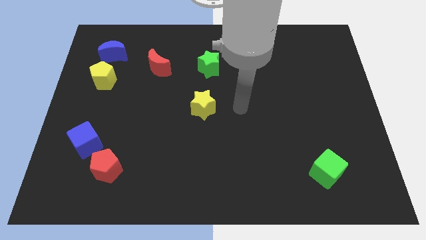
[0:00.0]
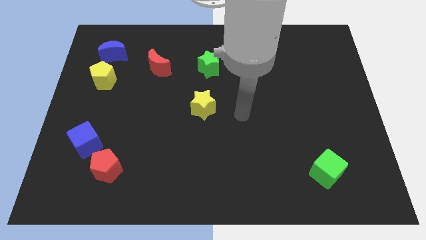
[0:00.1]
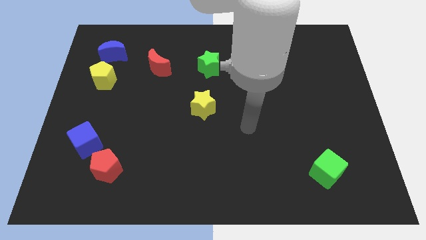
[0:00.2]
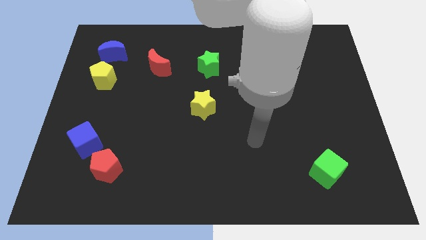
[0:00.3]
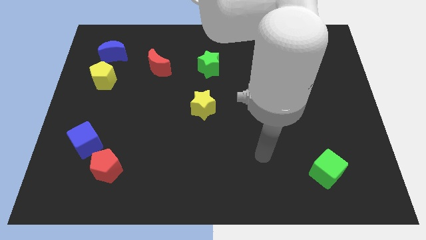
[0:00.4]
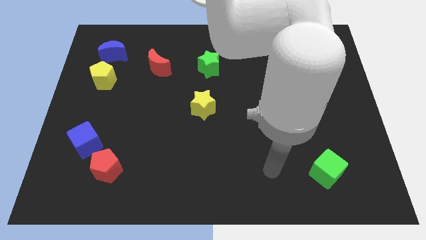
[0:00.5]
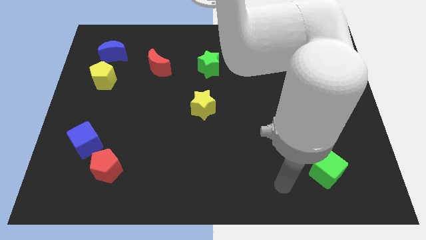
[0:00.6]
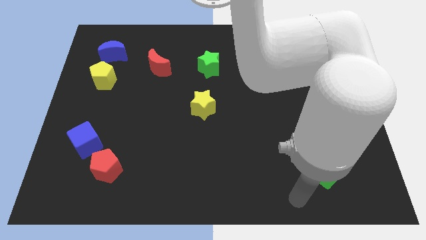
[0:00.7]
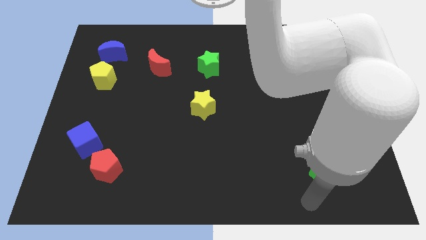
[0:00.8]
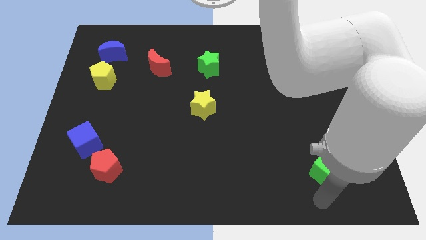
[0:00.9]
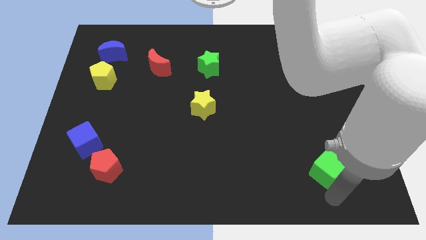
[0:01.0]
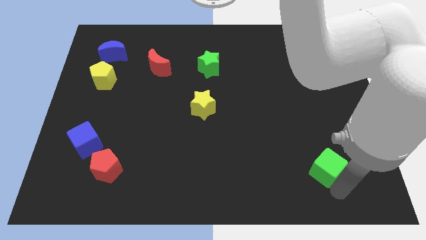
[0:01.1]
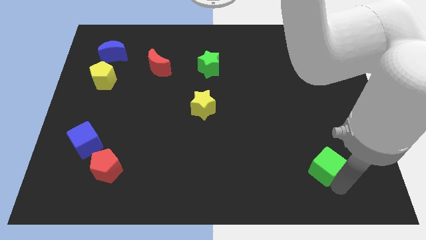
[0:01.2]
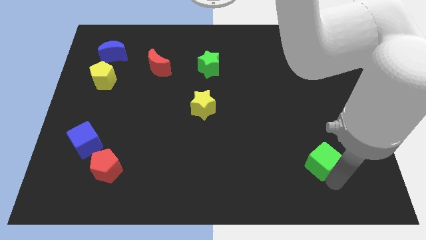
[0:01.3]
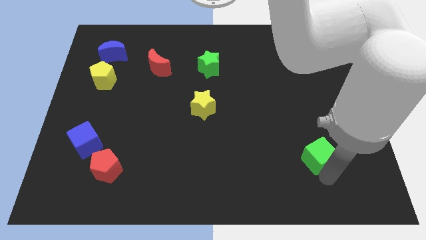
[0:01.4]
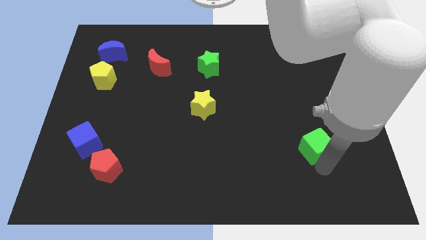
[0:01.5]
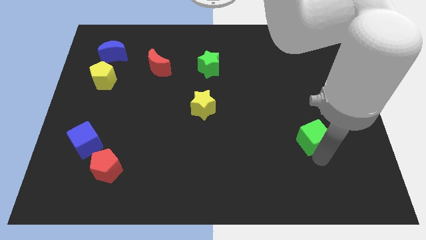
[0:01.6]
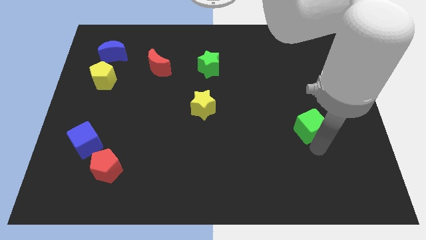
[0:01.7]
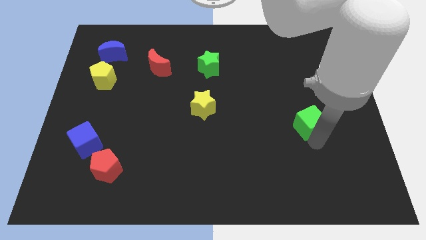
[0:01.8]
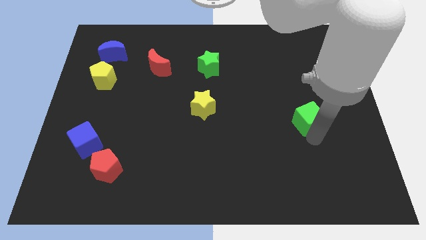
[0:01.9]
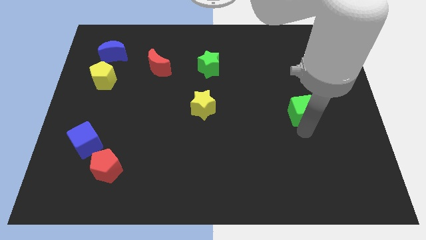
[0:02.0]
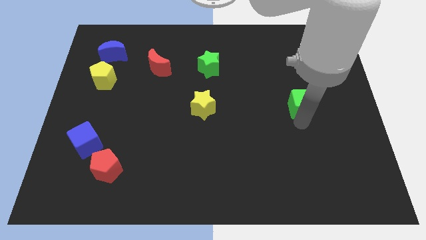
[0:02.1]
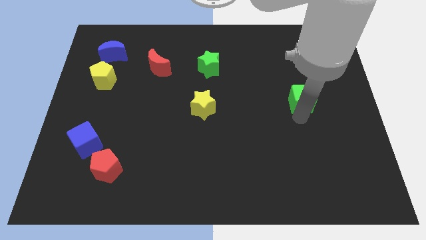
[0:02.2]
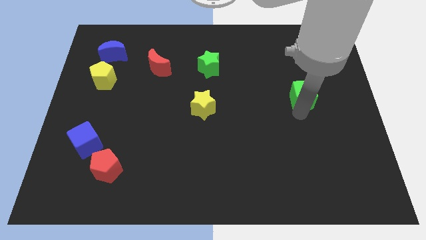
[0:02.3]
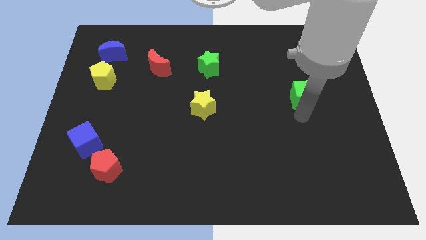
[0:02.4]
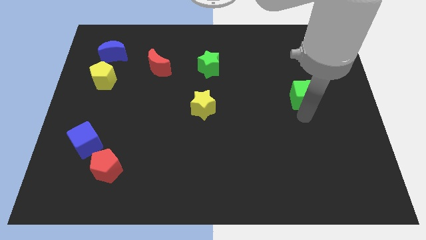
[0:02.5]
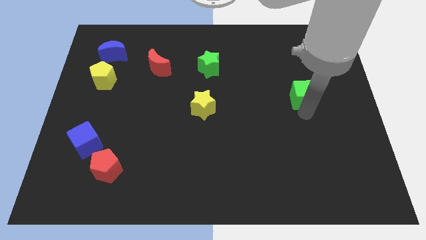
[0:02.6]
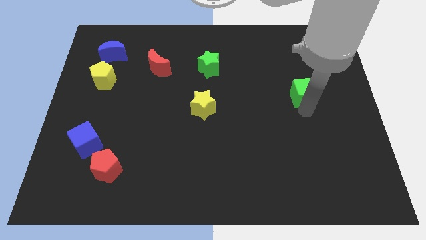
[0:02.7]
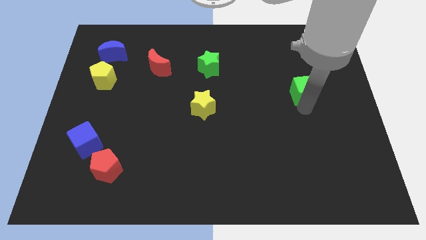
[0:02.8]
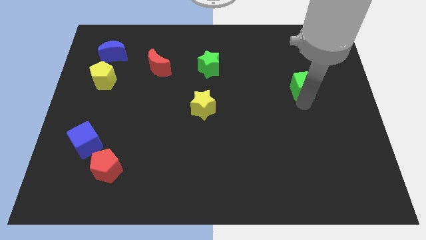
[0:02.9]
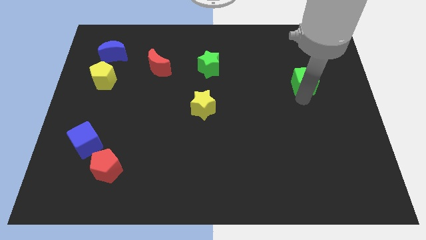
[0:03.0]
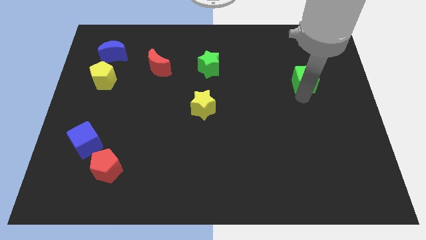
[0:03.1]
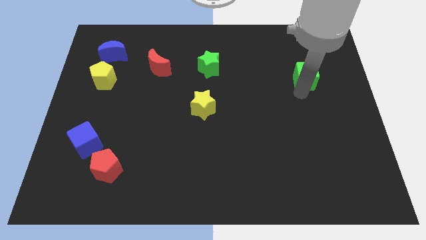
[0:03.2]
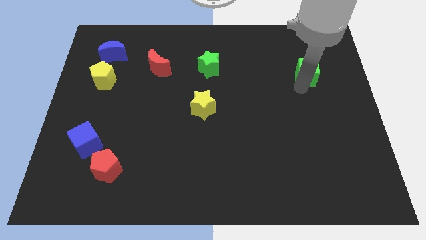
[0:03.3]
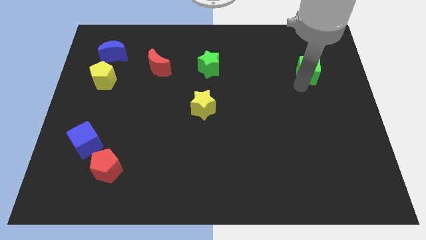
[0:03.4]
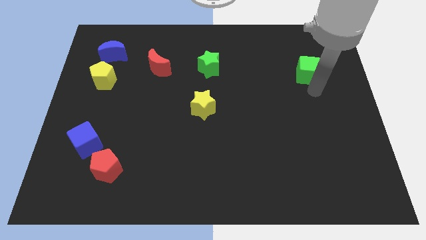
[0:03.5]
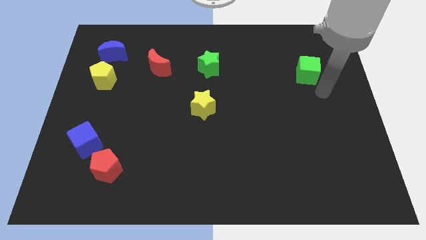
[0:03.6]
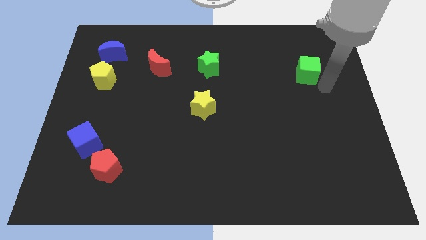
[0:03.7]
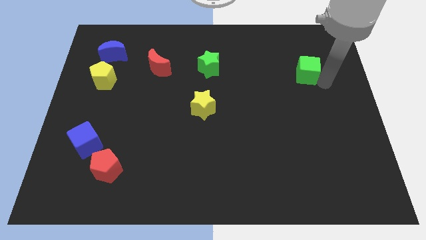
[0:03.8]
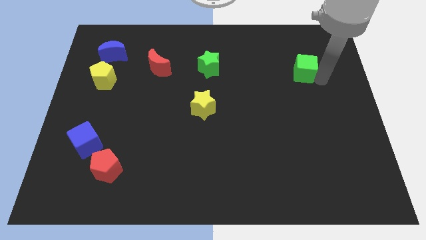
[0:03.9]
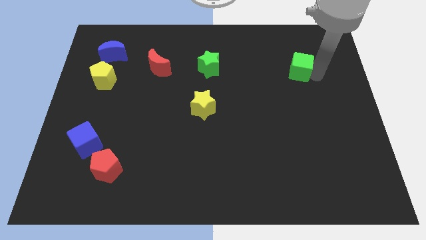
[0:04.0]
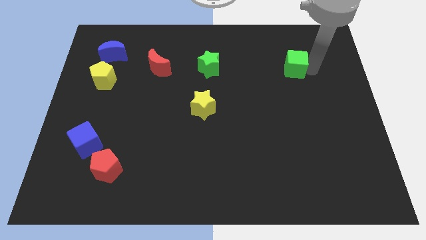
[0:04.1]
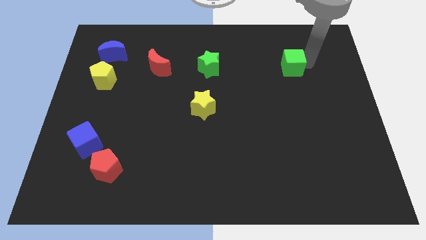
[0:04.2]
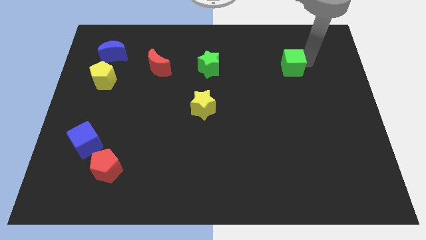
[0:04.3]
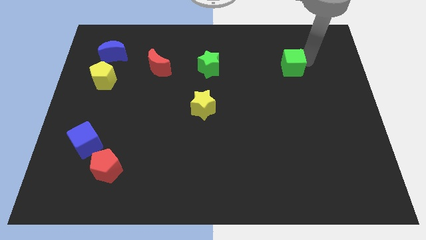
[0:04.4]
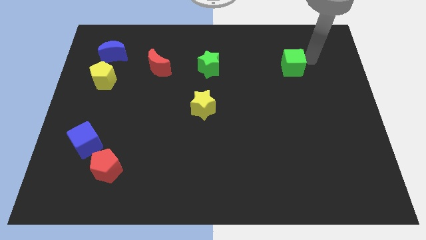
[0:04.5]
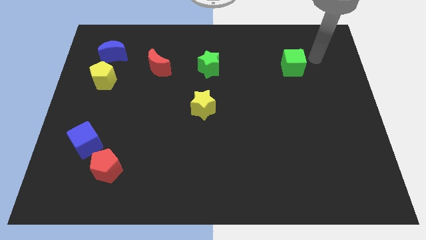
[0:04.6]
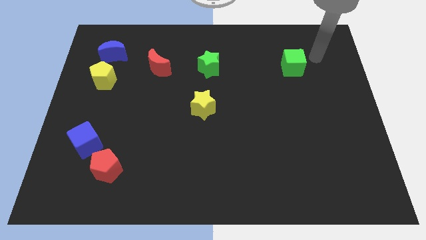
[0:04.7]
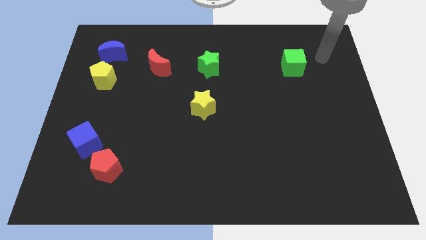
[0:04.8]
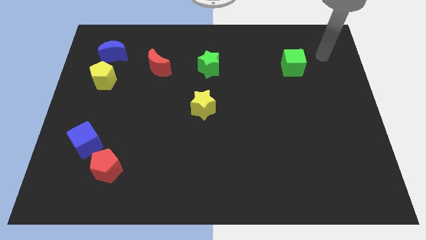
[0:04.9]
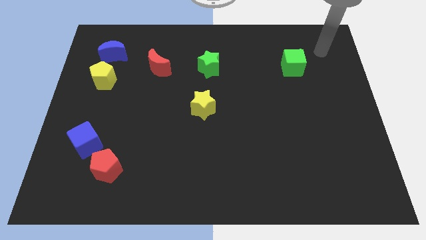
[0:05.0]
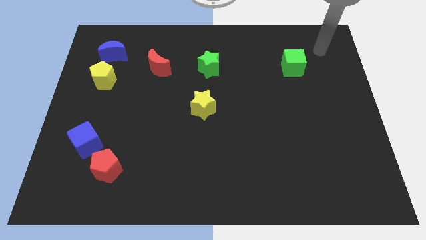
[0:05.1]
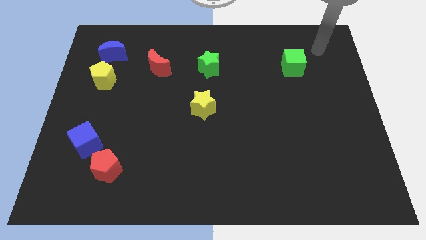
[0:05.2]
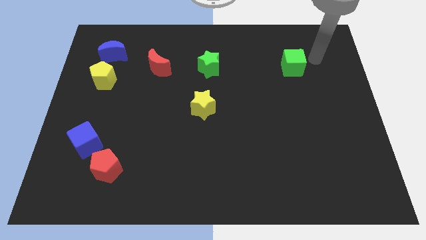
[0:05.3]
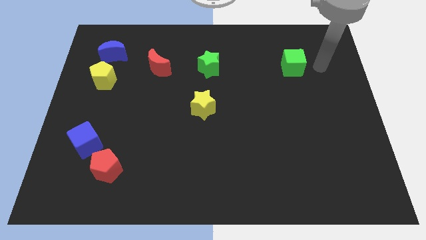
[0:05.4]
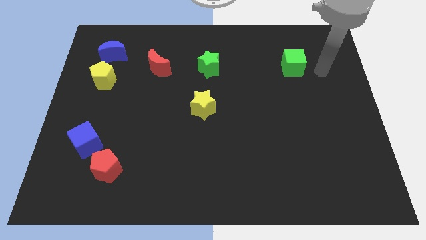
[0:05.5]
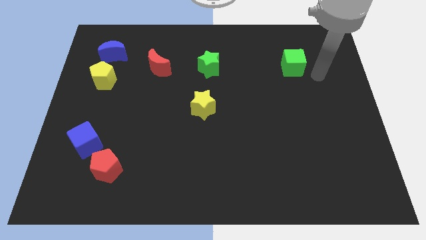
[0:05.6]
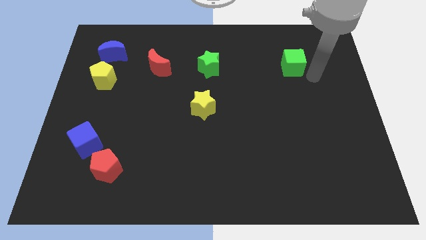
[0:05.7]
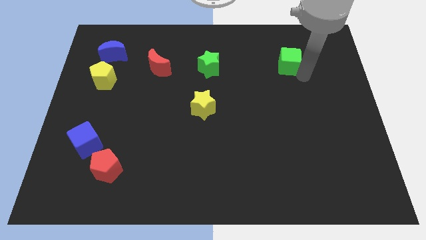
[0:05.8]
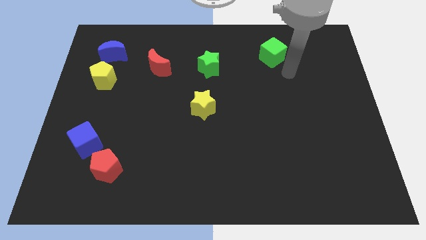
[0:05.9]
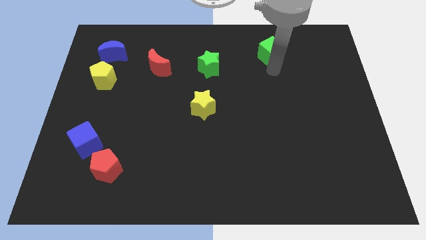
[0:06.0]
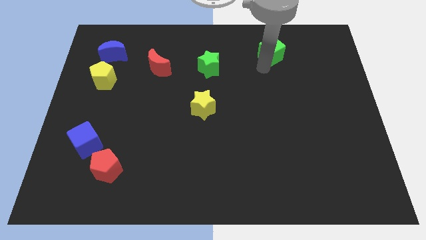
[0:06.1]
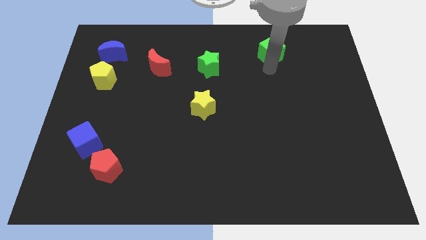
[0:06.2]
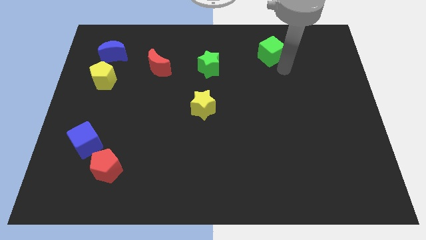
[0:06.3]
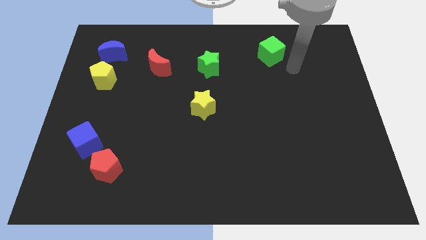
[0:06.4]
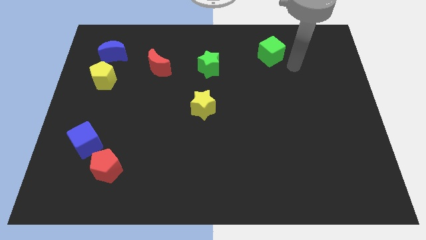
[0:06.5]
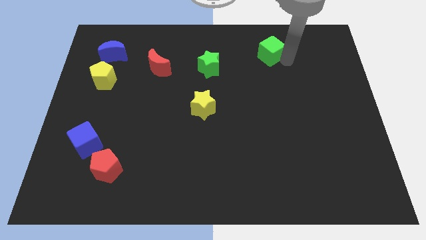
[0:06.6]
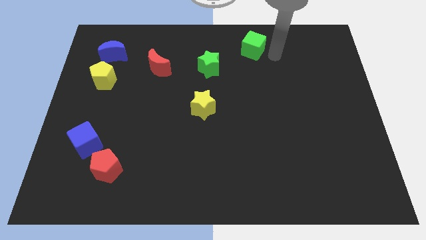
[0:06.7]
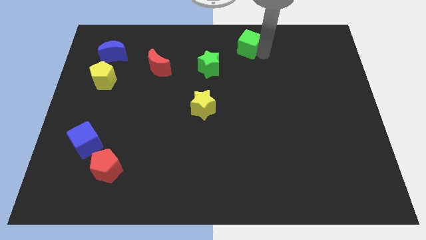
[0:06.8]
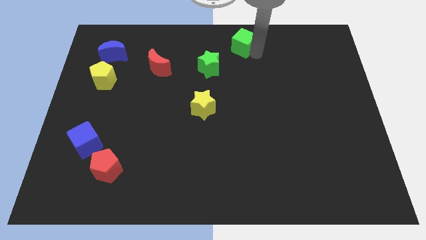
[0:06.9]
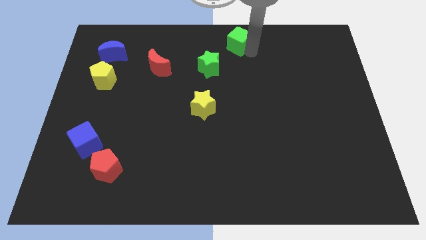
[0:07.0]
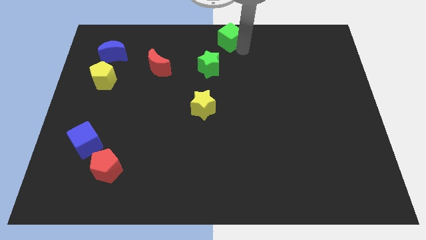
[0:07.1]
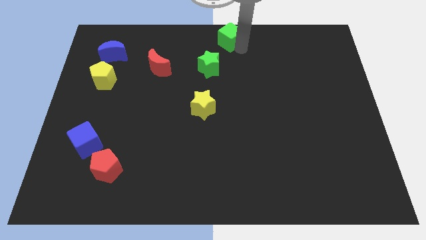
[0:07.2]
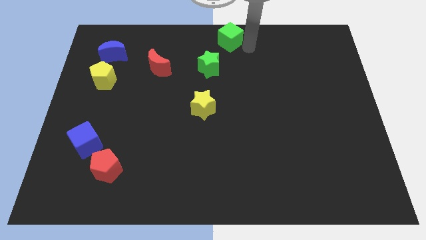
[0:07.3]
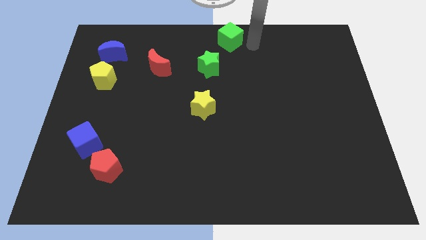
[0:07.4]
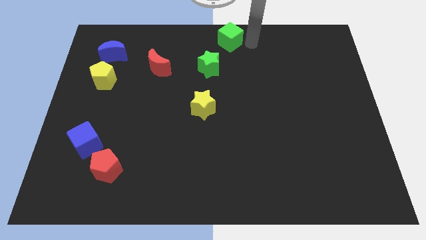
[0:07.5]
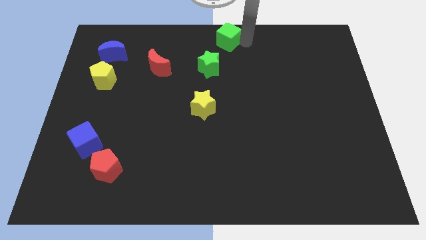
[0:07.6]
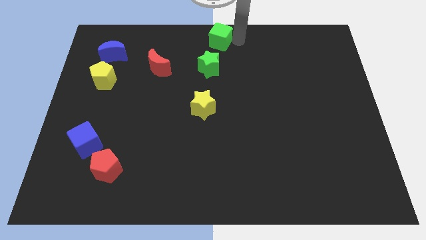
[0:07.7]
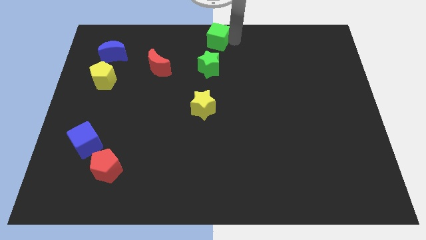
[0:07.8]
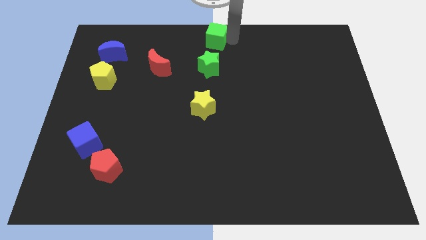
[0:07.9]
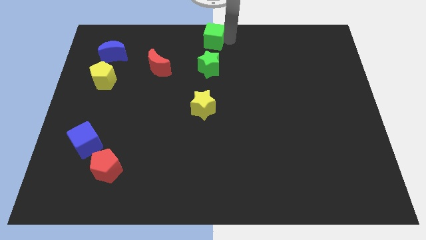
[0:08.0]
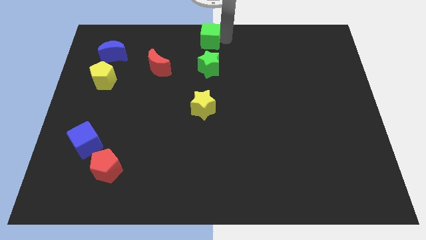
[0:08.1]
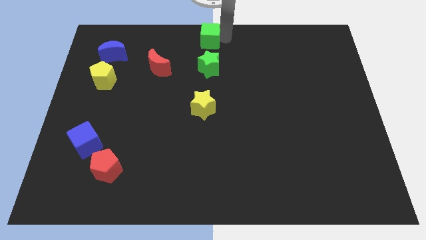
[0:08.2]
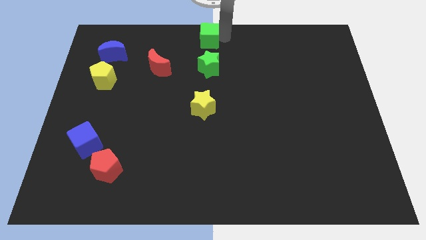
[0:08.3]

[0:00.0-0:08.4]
place green cube above green star

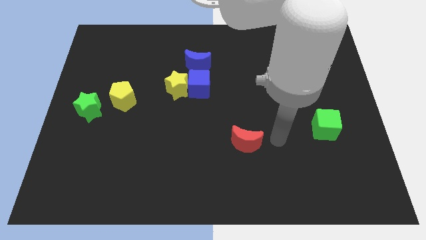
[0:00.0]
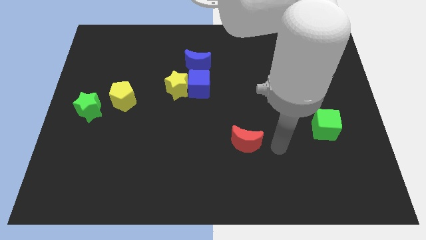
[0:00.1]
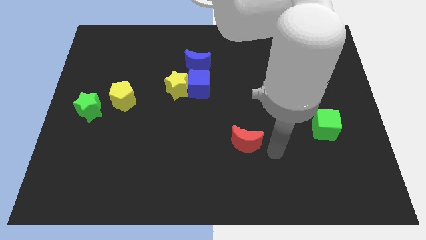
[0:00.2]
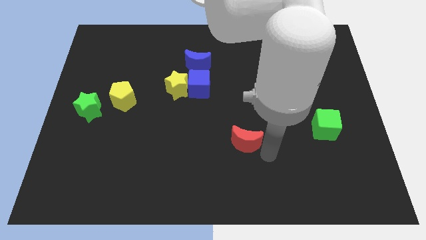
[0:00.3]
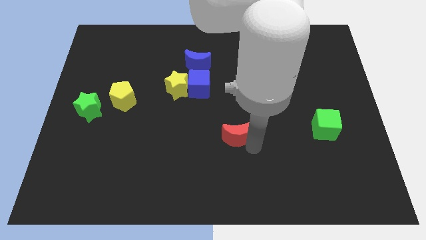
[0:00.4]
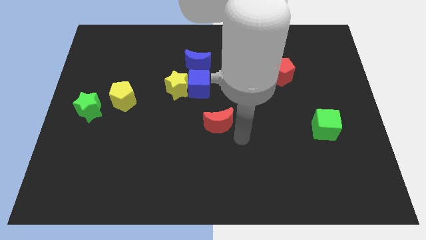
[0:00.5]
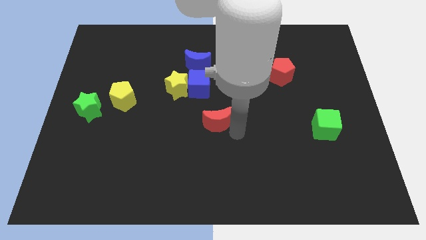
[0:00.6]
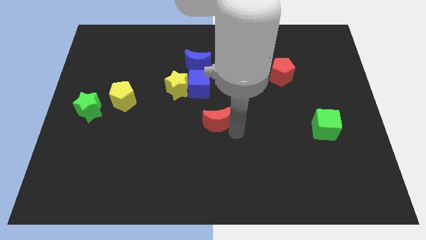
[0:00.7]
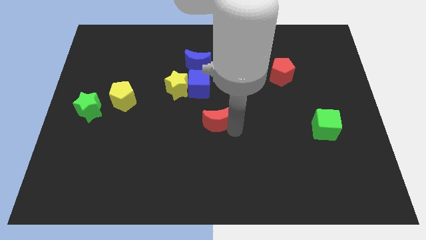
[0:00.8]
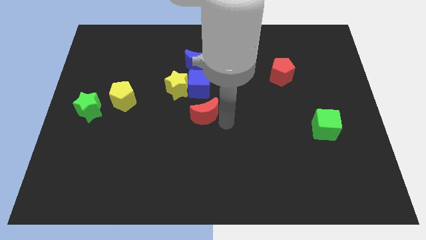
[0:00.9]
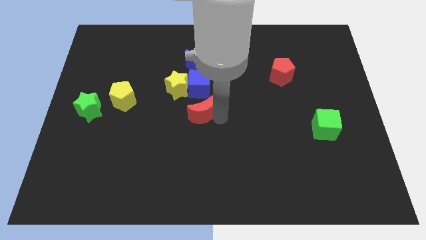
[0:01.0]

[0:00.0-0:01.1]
move red moon slightly upwards
